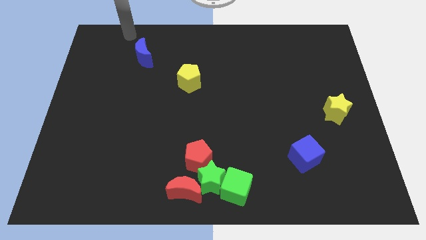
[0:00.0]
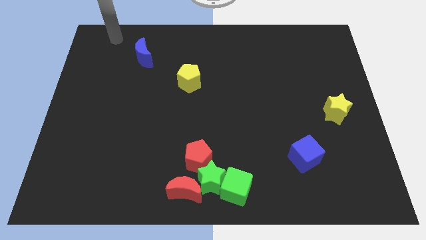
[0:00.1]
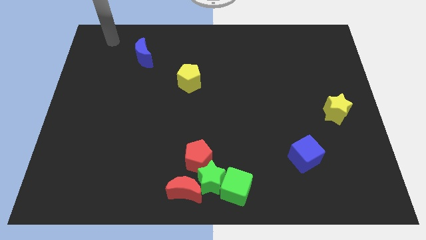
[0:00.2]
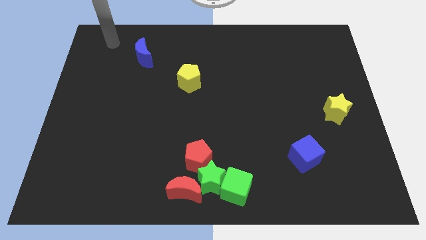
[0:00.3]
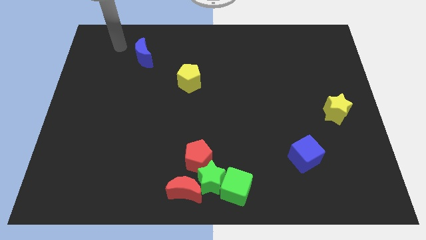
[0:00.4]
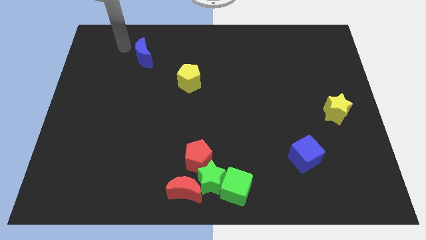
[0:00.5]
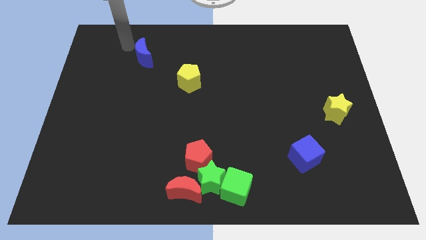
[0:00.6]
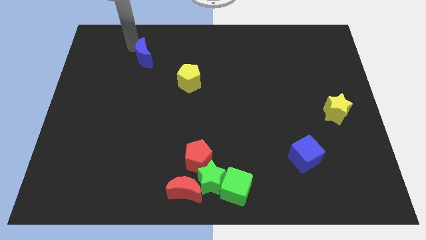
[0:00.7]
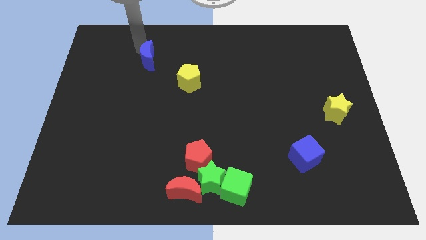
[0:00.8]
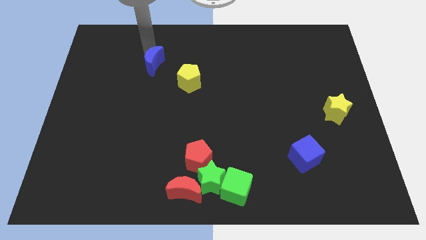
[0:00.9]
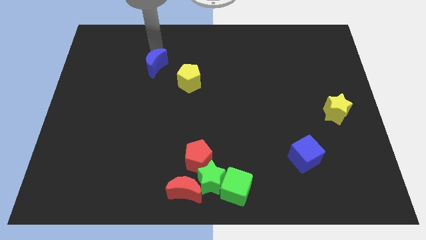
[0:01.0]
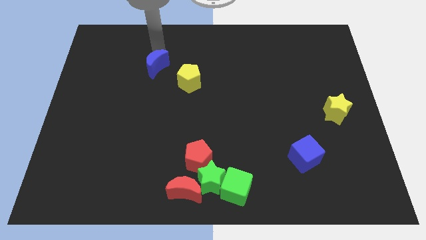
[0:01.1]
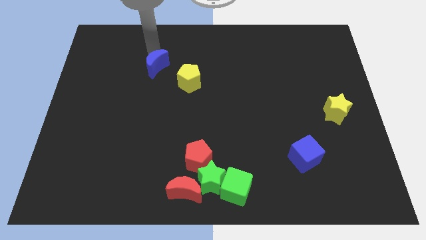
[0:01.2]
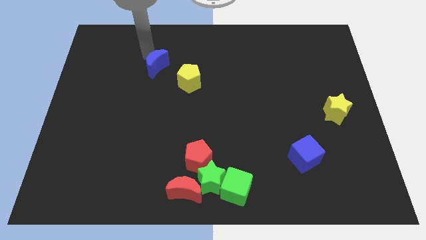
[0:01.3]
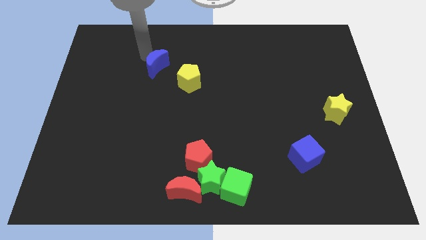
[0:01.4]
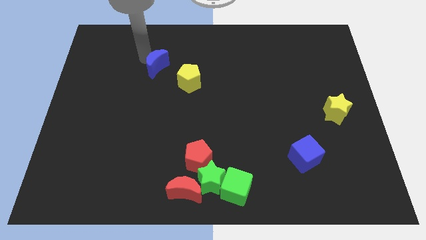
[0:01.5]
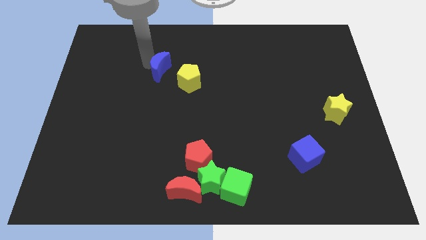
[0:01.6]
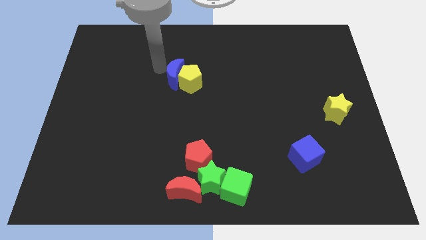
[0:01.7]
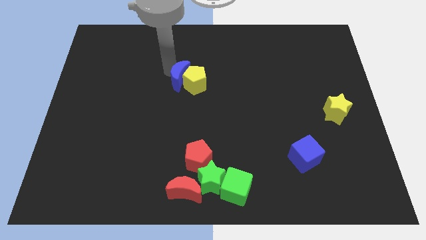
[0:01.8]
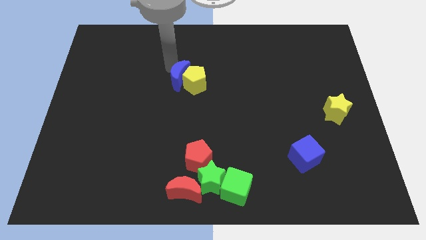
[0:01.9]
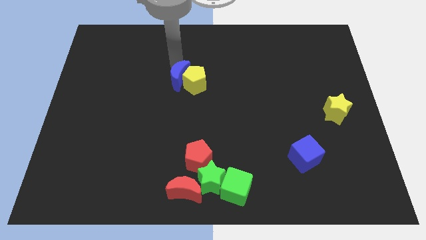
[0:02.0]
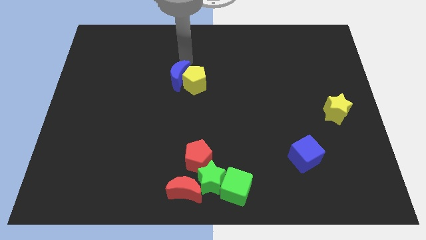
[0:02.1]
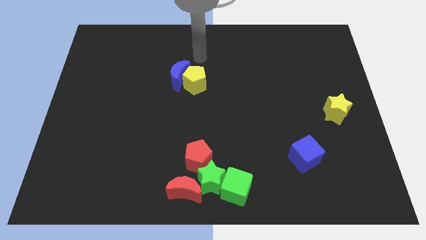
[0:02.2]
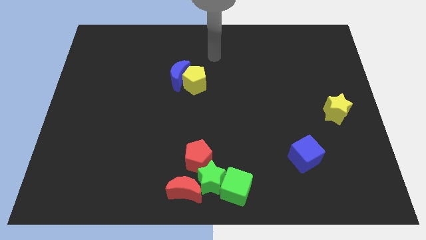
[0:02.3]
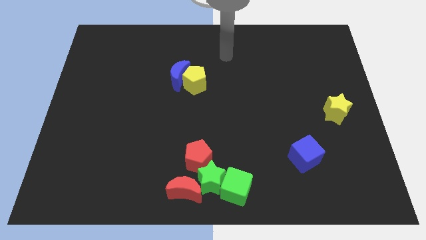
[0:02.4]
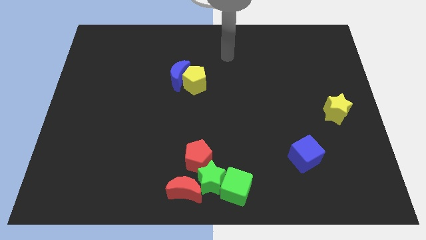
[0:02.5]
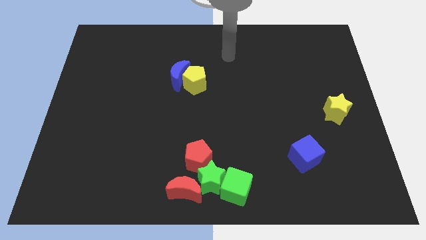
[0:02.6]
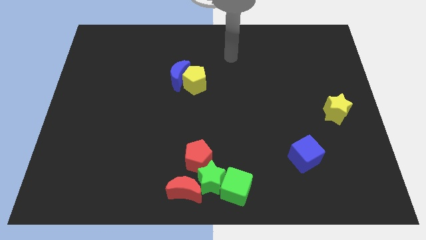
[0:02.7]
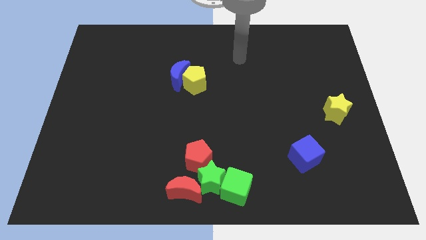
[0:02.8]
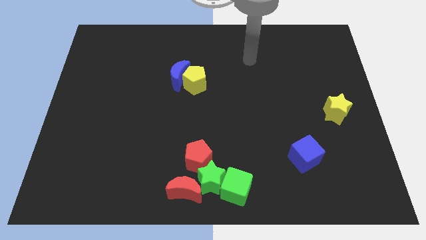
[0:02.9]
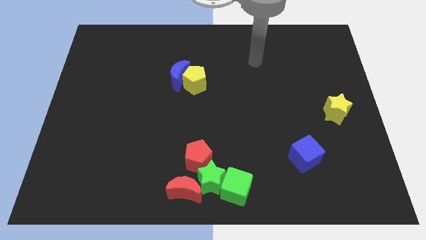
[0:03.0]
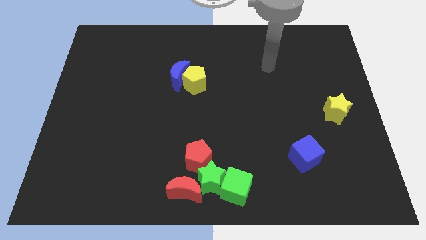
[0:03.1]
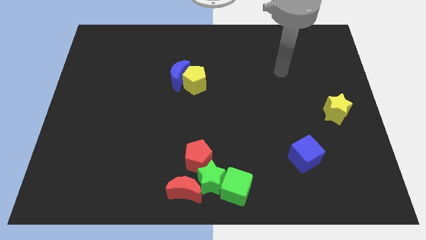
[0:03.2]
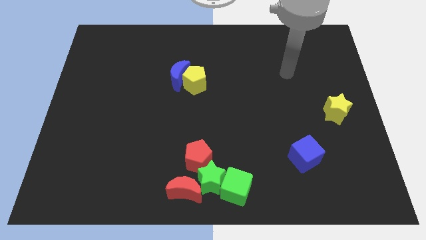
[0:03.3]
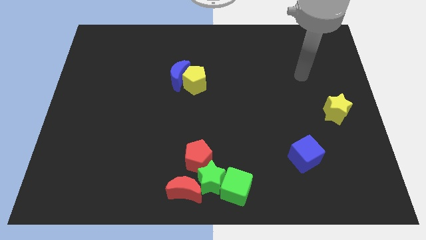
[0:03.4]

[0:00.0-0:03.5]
push blue moon in to yellow pentagon

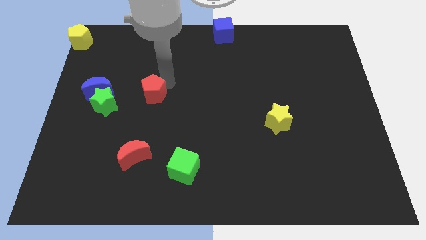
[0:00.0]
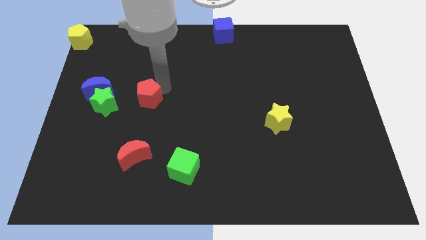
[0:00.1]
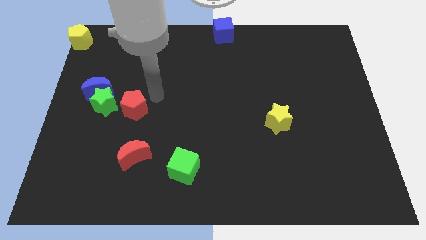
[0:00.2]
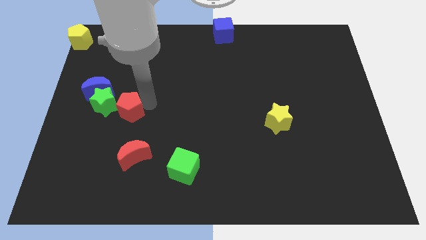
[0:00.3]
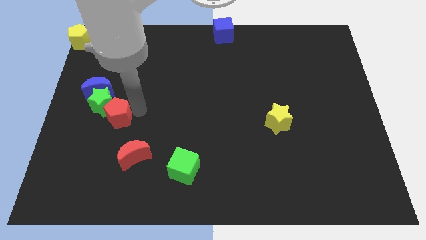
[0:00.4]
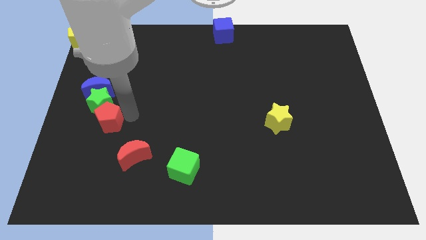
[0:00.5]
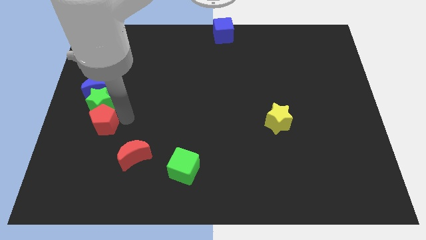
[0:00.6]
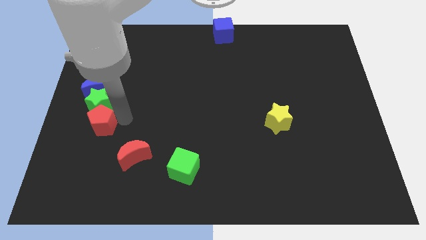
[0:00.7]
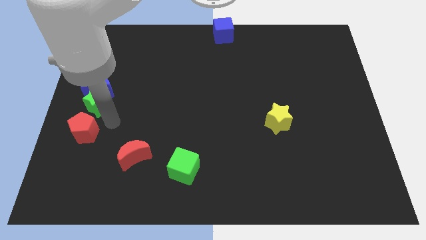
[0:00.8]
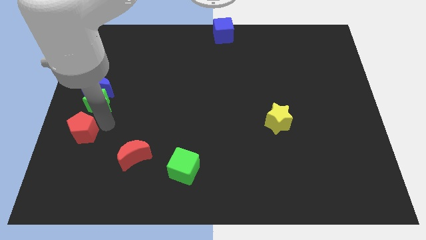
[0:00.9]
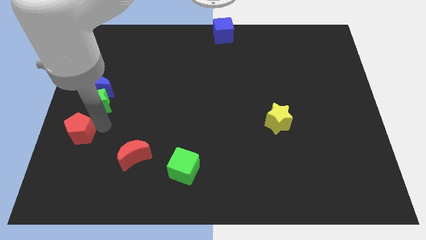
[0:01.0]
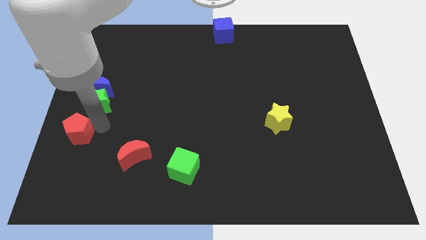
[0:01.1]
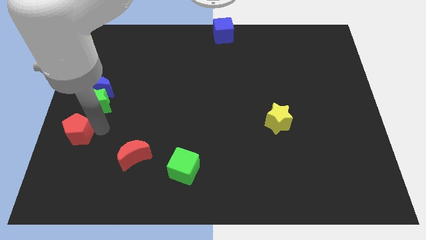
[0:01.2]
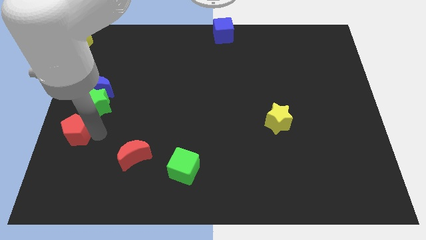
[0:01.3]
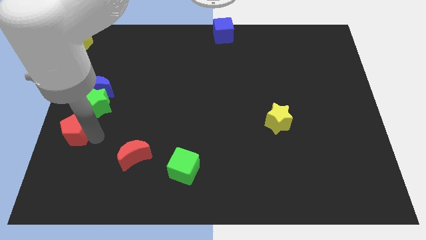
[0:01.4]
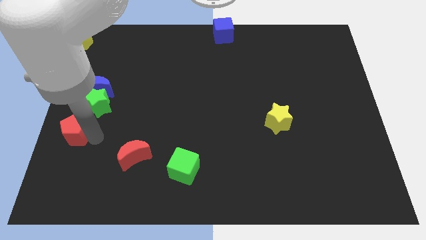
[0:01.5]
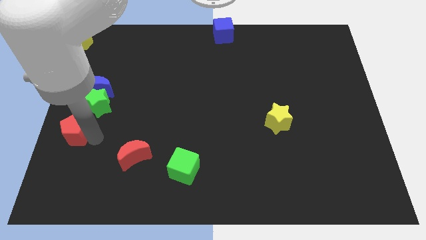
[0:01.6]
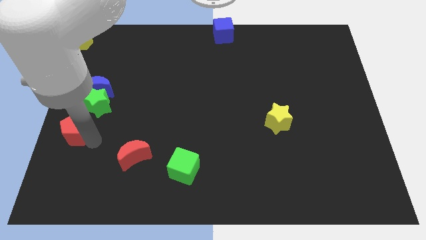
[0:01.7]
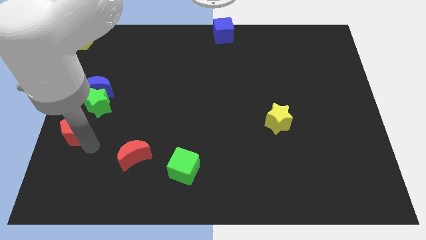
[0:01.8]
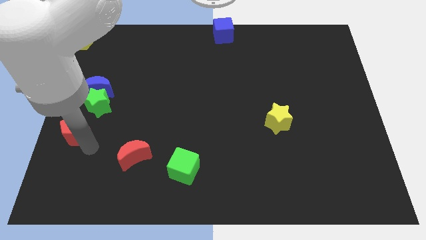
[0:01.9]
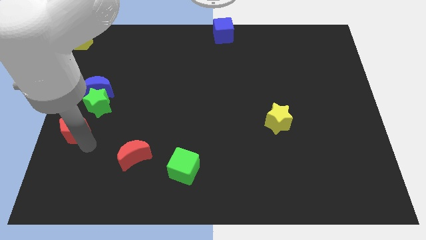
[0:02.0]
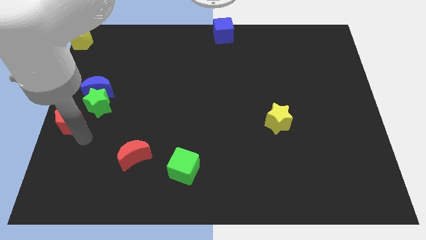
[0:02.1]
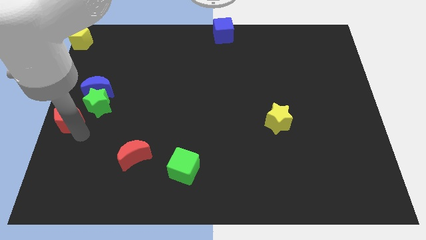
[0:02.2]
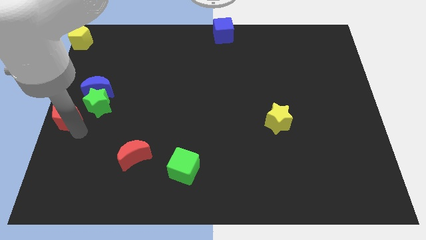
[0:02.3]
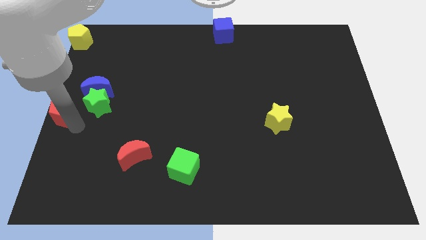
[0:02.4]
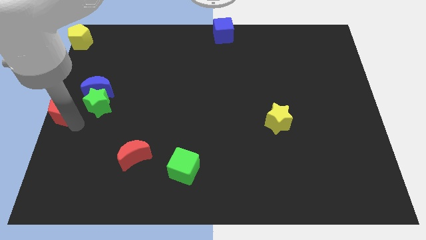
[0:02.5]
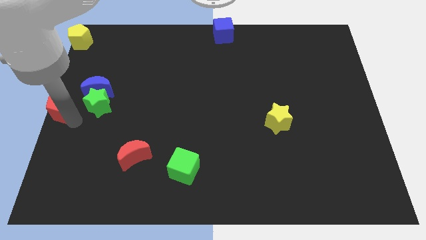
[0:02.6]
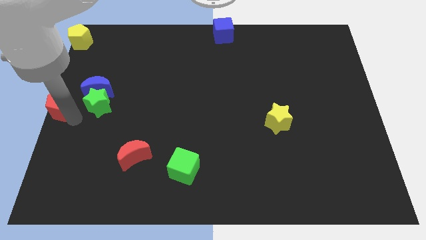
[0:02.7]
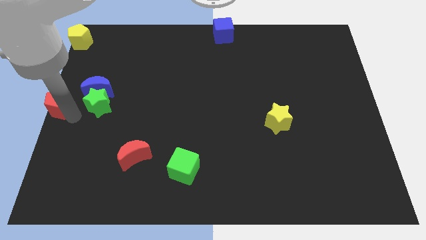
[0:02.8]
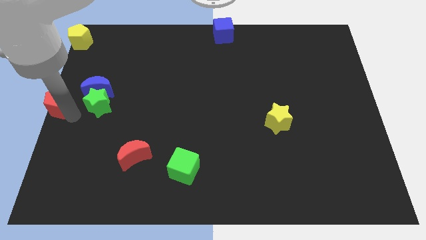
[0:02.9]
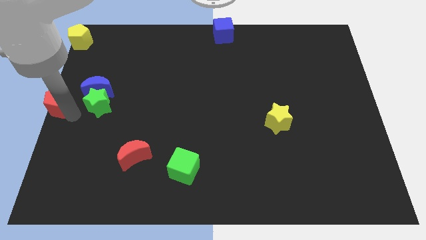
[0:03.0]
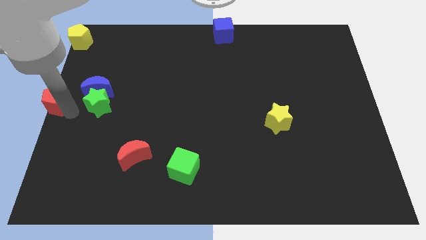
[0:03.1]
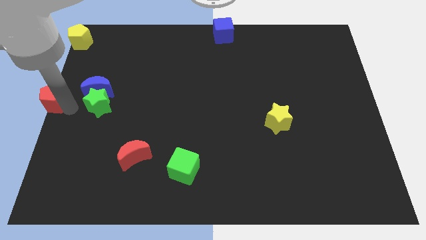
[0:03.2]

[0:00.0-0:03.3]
drag the red pentagon to the center left of the board

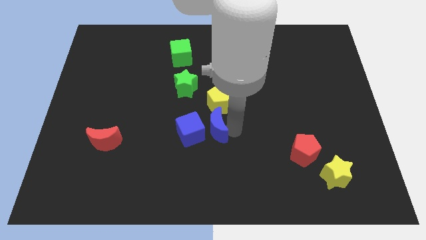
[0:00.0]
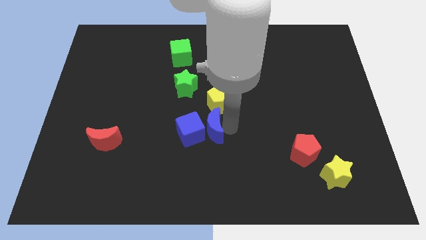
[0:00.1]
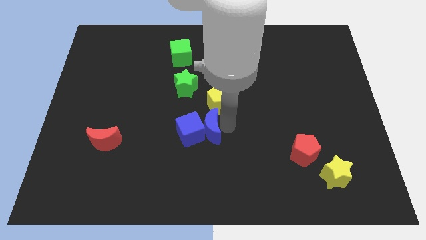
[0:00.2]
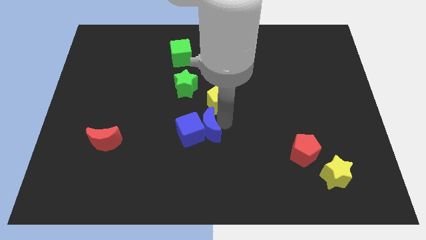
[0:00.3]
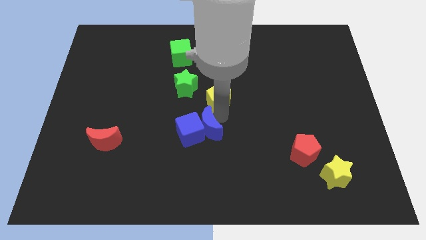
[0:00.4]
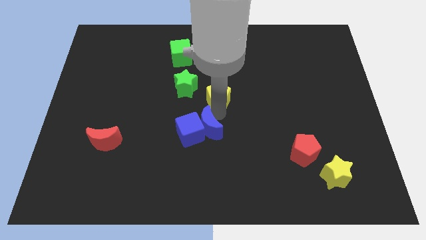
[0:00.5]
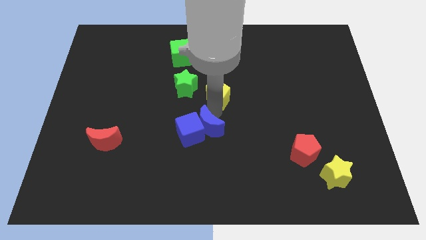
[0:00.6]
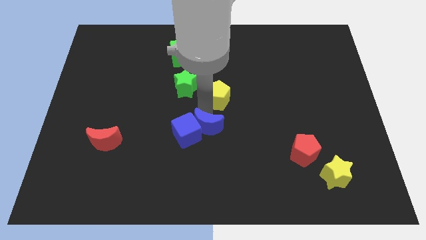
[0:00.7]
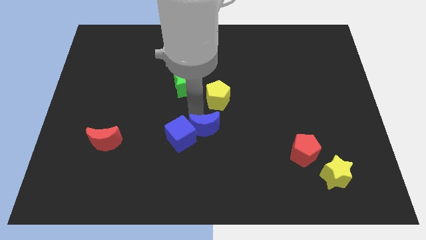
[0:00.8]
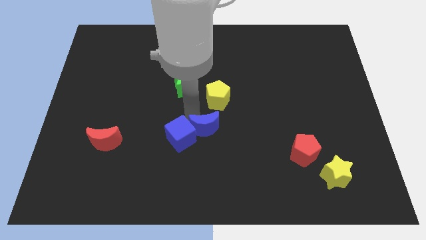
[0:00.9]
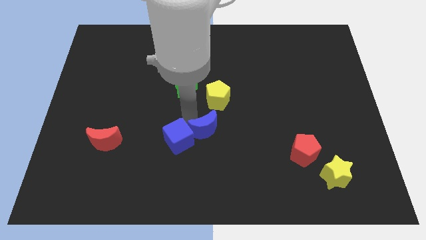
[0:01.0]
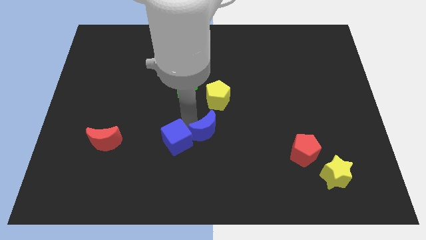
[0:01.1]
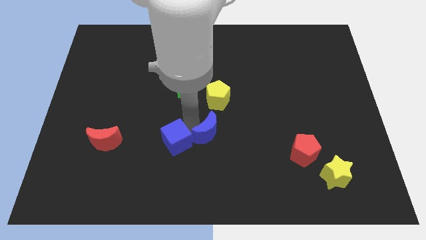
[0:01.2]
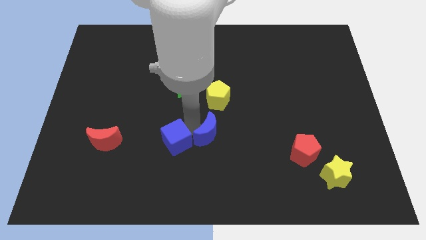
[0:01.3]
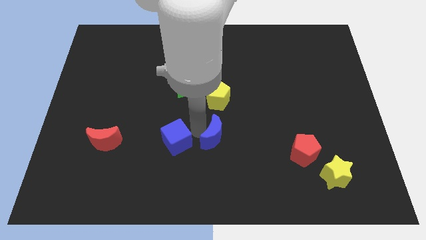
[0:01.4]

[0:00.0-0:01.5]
move the blue crescent to the right of the blue cube

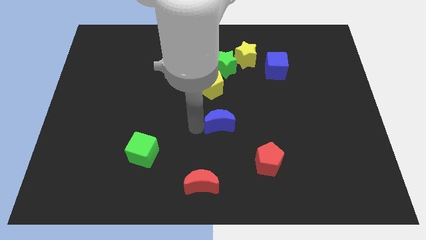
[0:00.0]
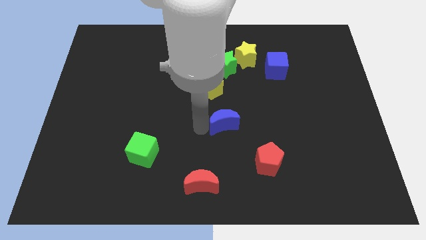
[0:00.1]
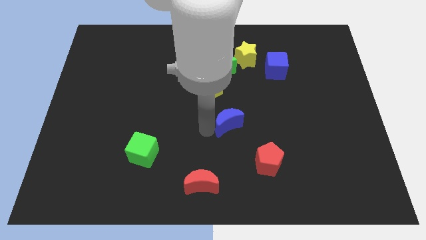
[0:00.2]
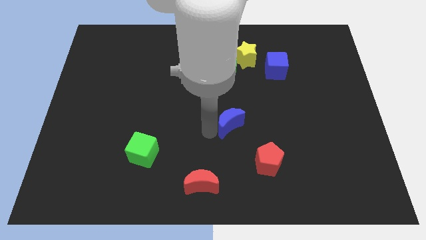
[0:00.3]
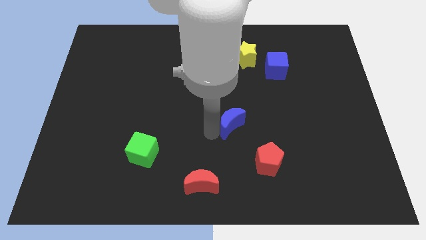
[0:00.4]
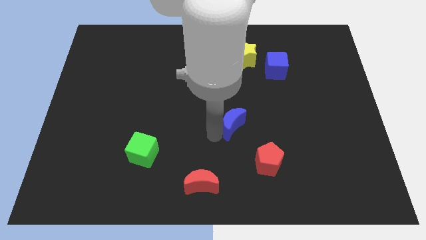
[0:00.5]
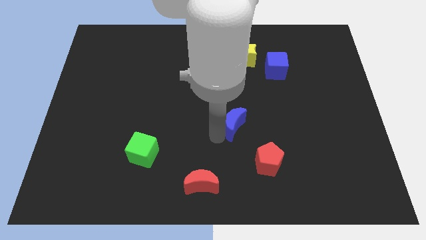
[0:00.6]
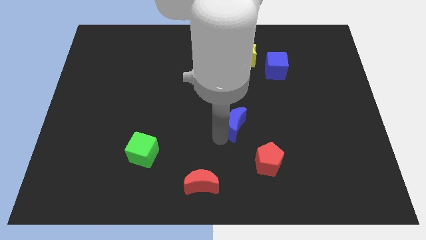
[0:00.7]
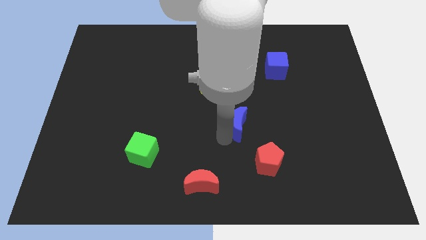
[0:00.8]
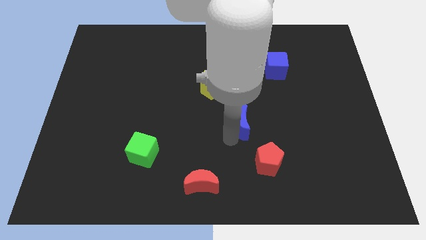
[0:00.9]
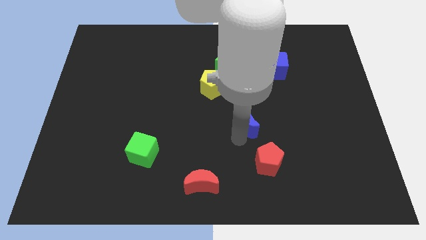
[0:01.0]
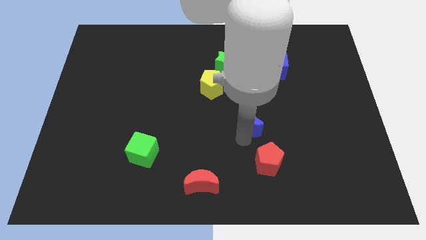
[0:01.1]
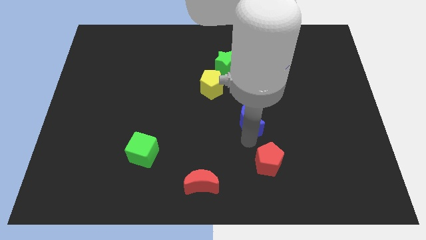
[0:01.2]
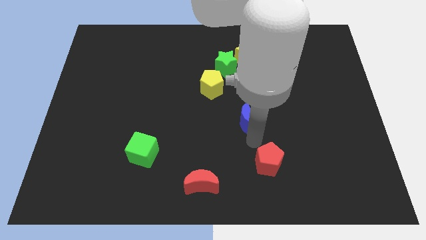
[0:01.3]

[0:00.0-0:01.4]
slightly turn the blue moon
